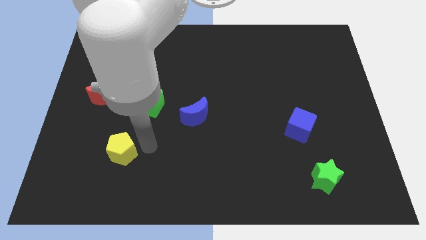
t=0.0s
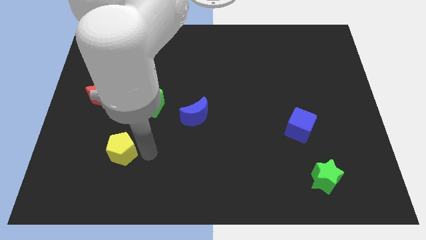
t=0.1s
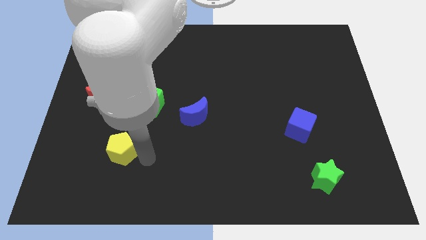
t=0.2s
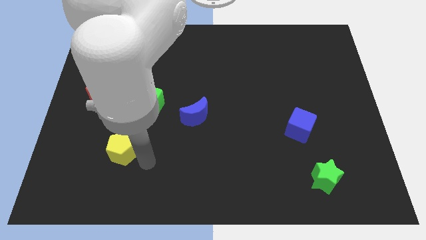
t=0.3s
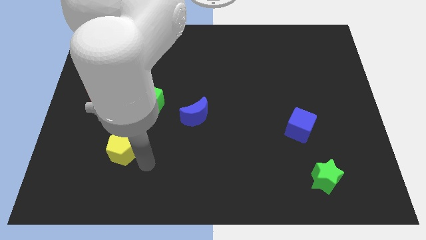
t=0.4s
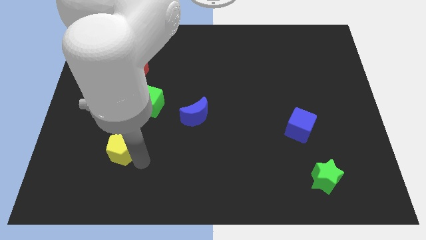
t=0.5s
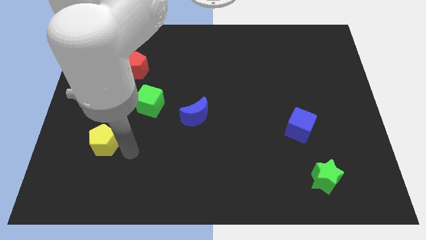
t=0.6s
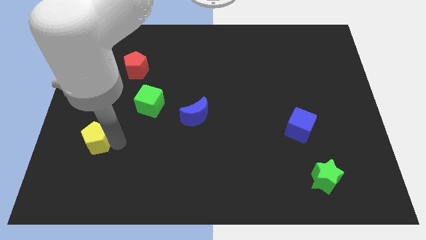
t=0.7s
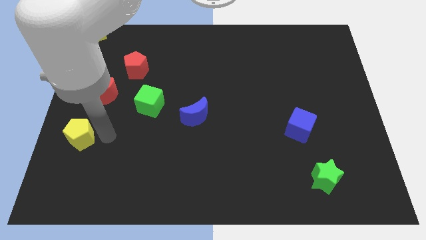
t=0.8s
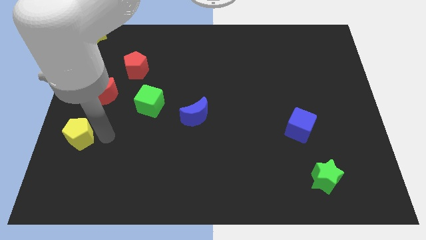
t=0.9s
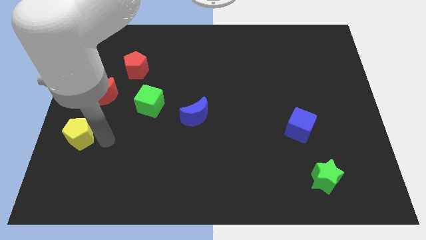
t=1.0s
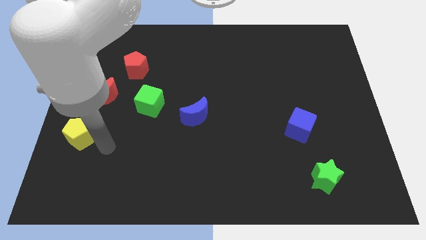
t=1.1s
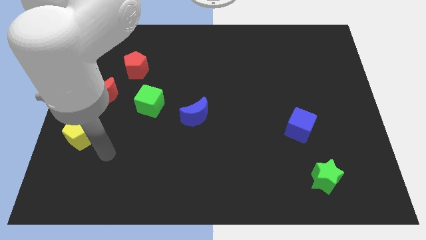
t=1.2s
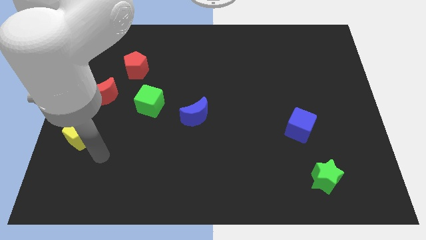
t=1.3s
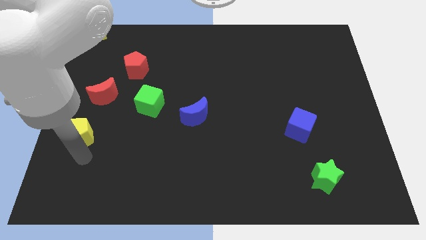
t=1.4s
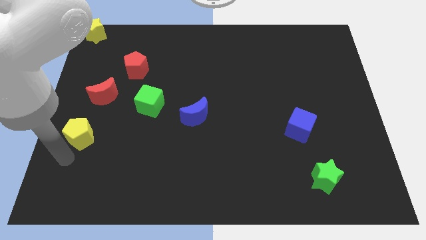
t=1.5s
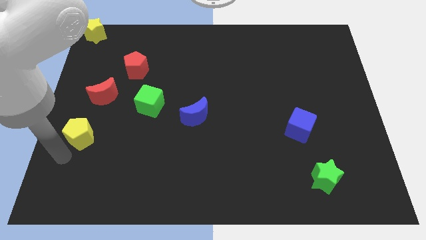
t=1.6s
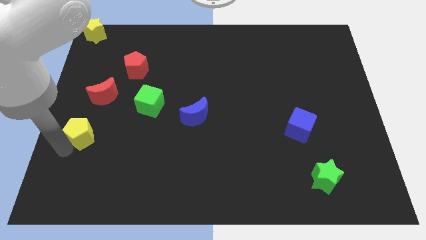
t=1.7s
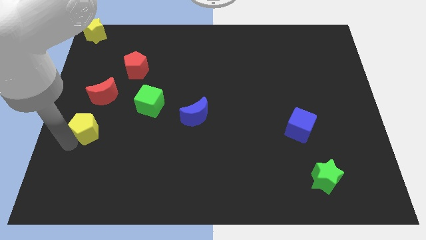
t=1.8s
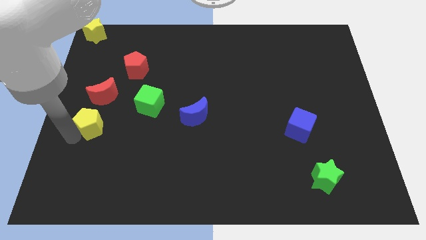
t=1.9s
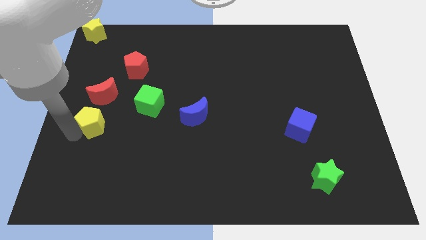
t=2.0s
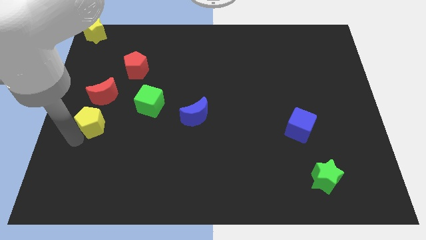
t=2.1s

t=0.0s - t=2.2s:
move the yellow pentagon under red crescent

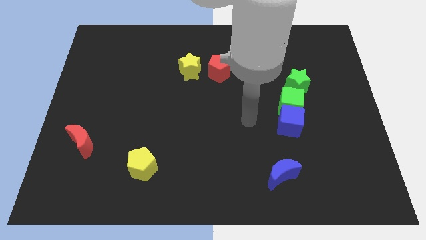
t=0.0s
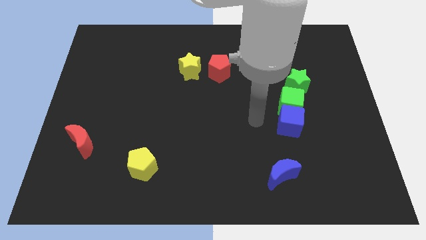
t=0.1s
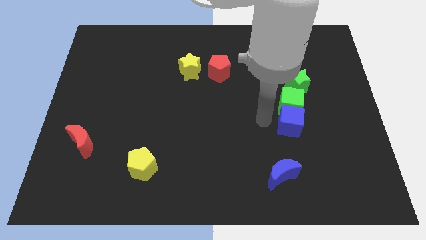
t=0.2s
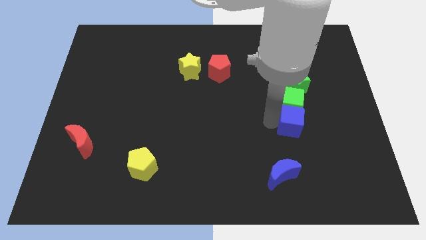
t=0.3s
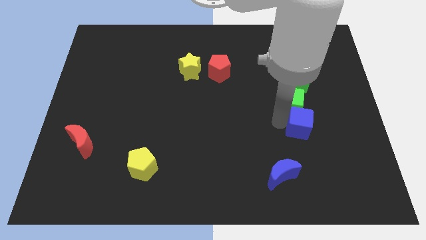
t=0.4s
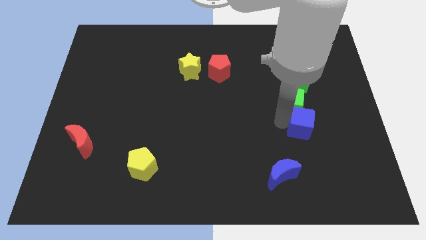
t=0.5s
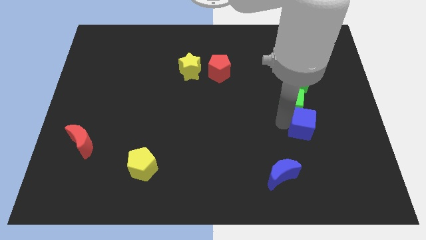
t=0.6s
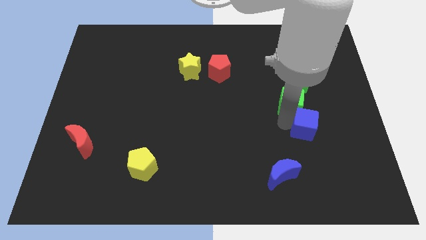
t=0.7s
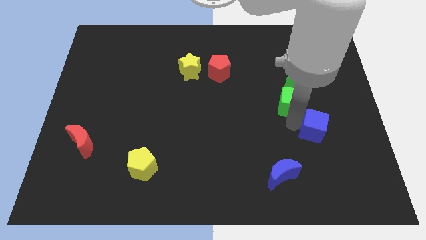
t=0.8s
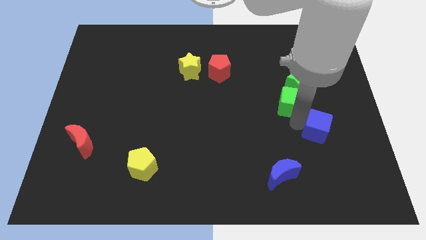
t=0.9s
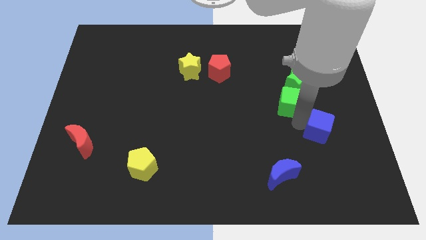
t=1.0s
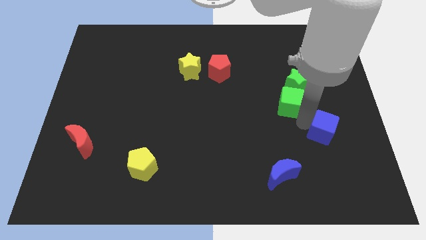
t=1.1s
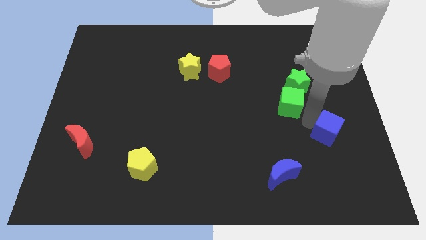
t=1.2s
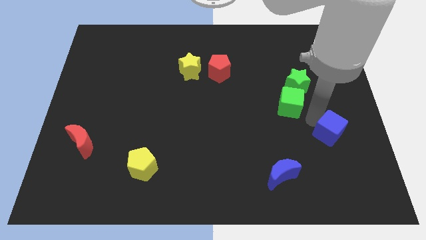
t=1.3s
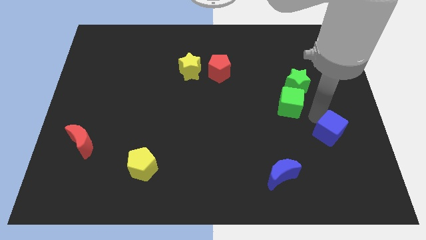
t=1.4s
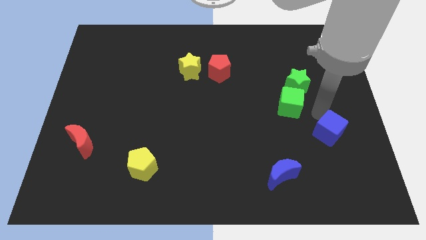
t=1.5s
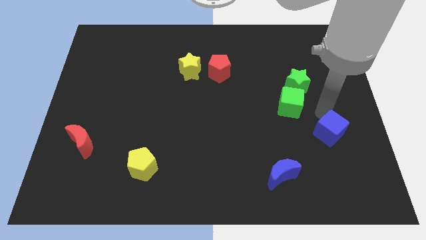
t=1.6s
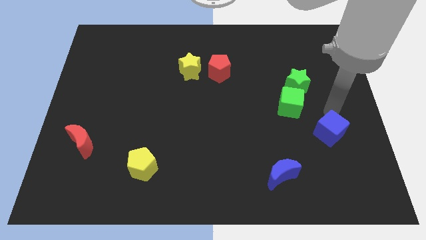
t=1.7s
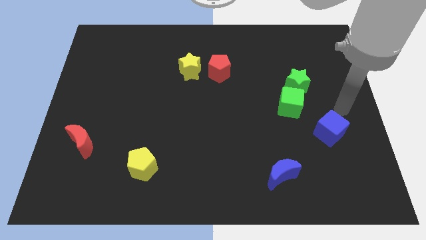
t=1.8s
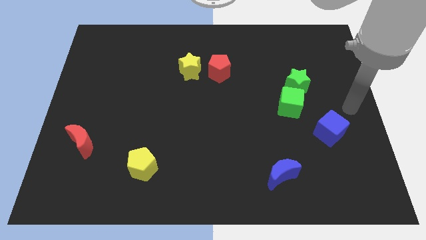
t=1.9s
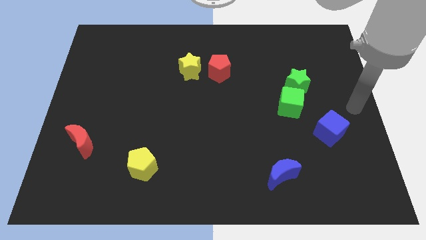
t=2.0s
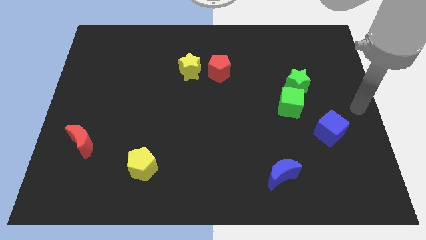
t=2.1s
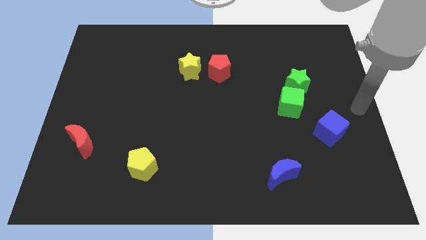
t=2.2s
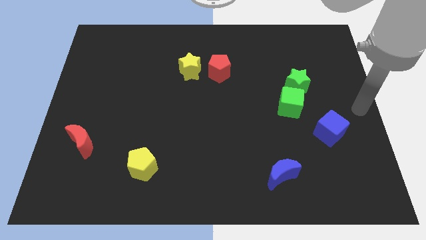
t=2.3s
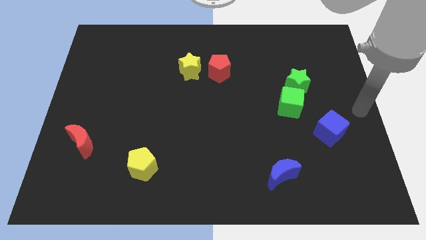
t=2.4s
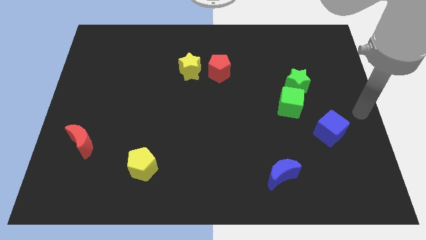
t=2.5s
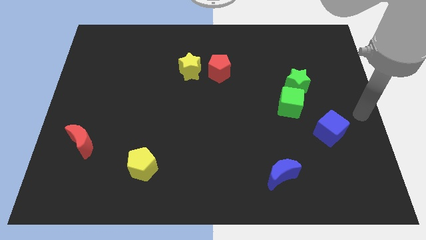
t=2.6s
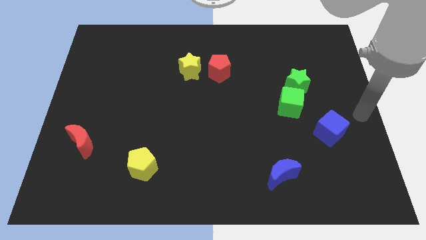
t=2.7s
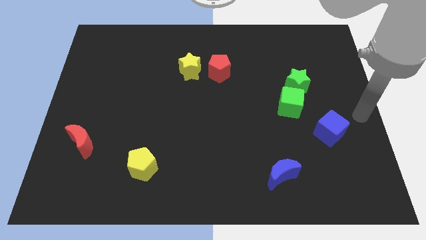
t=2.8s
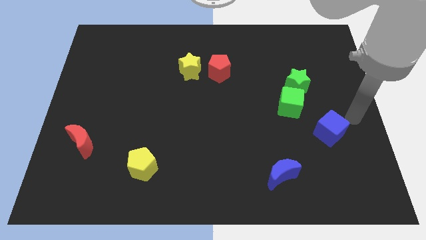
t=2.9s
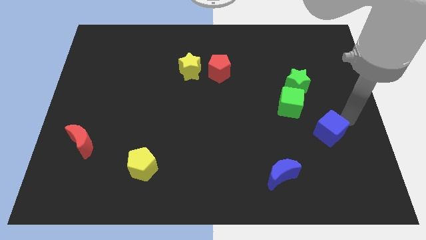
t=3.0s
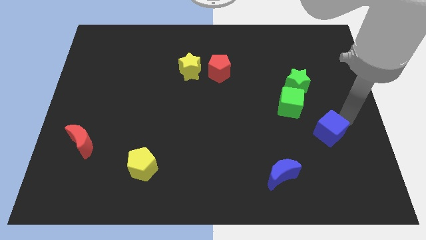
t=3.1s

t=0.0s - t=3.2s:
separate the blue cube from the green cube

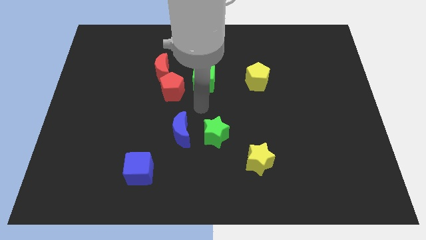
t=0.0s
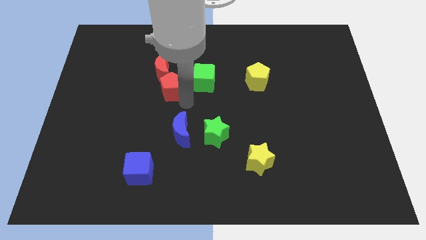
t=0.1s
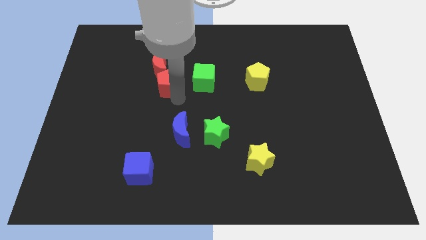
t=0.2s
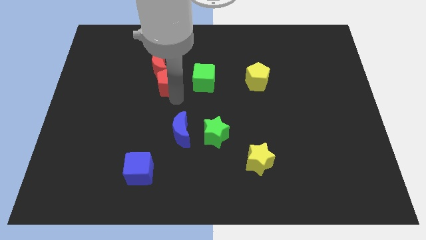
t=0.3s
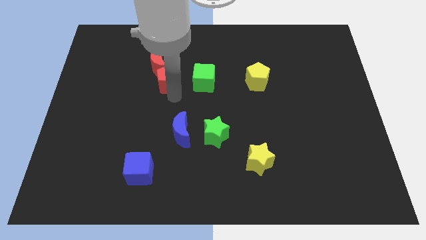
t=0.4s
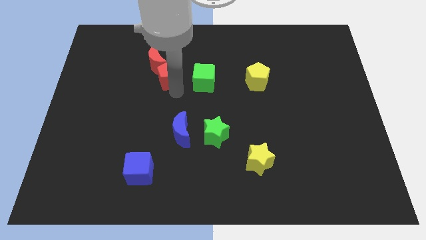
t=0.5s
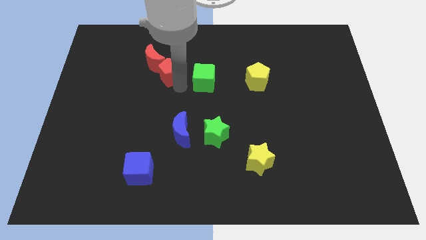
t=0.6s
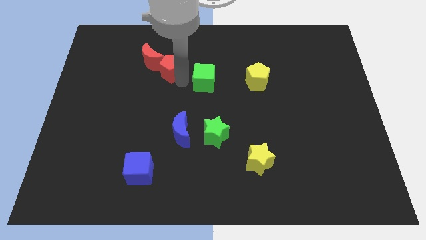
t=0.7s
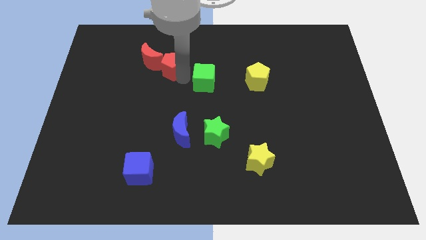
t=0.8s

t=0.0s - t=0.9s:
move red blocks slightly towards top

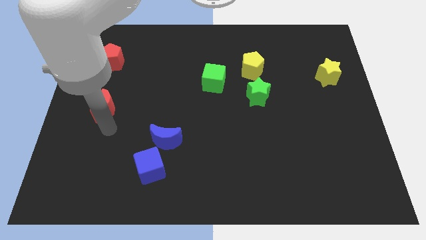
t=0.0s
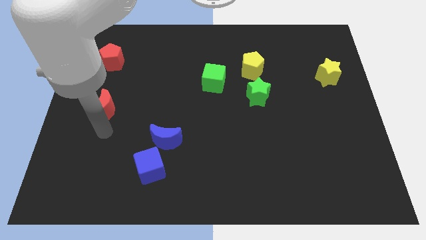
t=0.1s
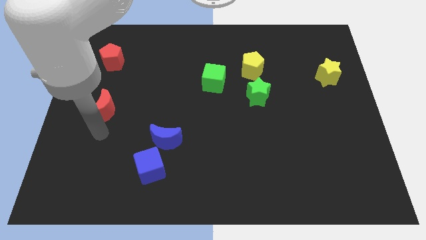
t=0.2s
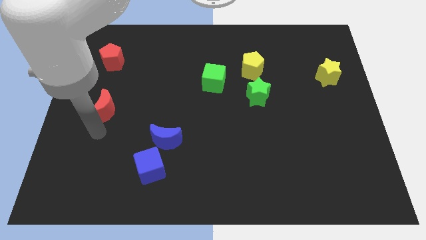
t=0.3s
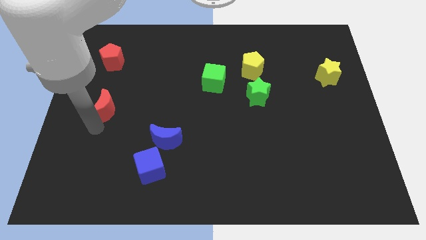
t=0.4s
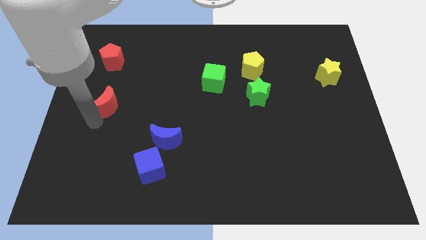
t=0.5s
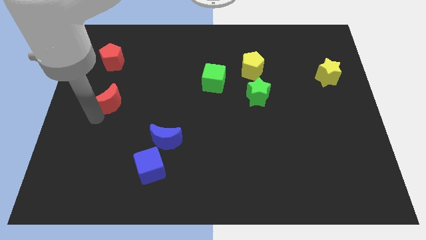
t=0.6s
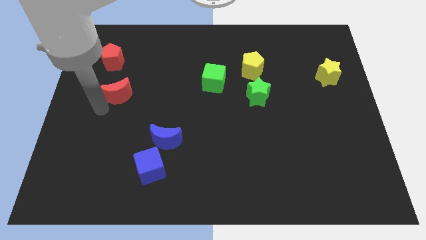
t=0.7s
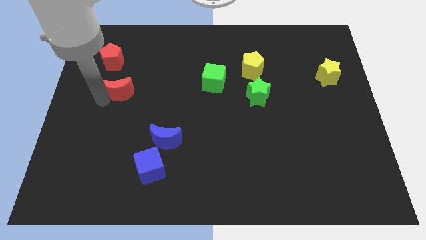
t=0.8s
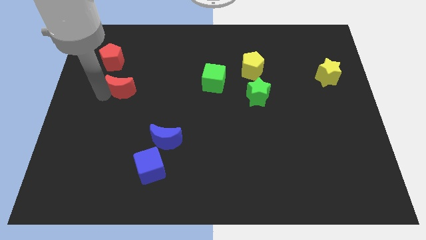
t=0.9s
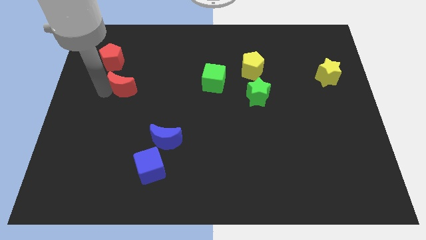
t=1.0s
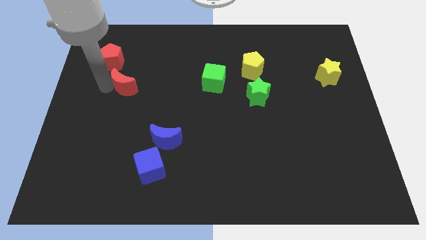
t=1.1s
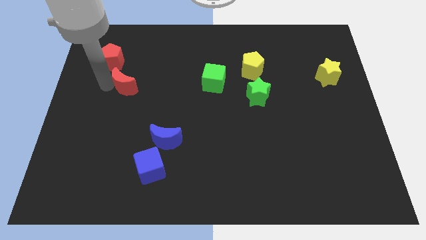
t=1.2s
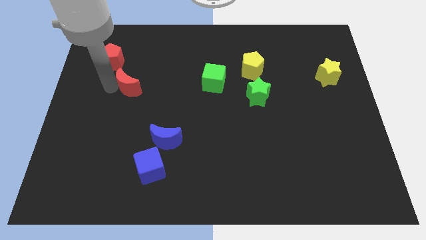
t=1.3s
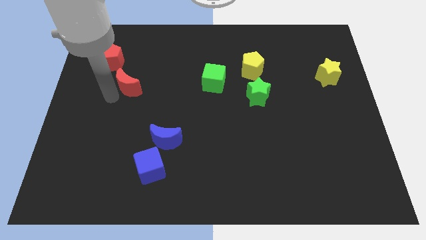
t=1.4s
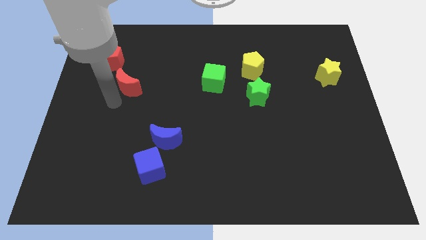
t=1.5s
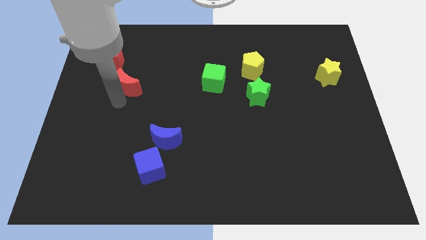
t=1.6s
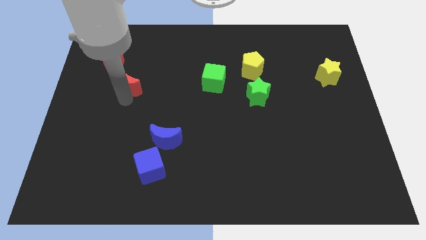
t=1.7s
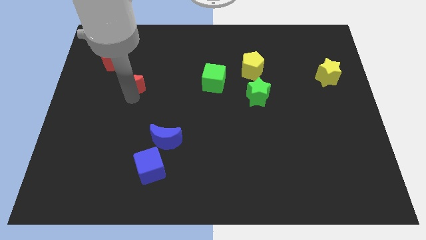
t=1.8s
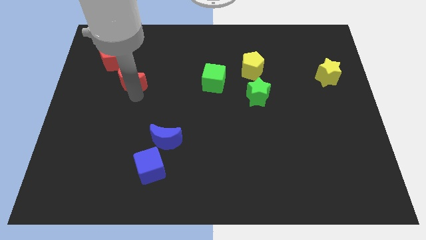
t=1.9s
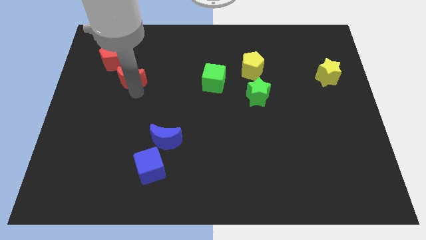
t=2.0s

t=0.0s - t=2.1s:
move the red crescent to the bottom right of the red pentagon

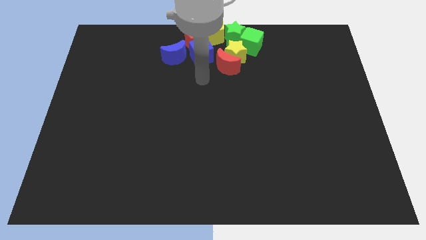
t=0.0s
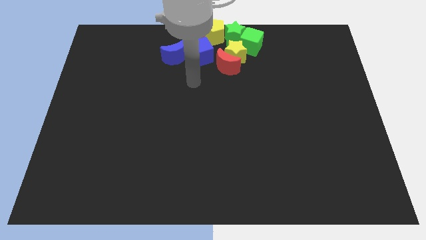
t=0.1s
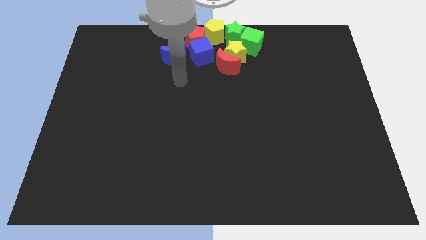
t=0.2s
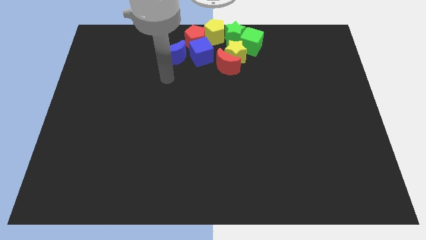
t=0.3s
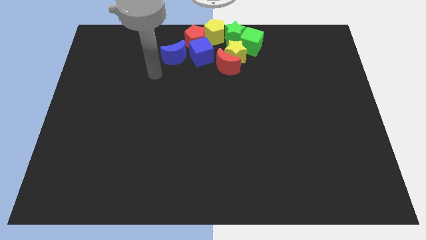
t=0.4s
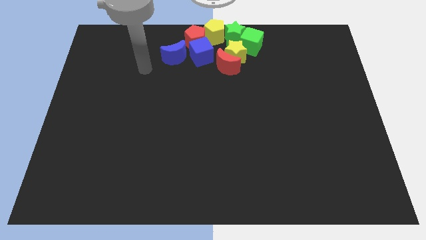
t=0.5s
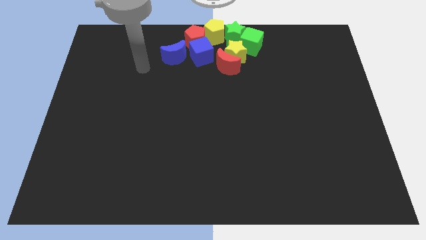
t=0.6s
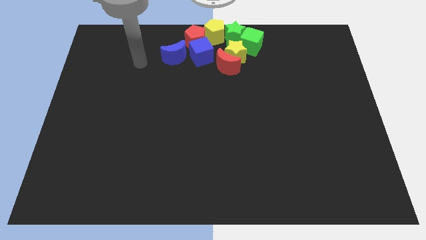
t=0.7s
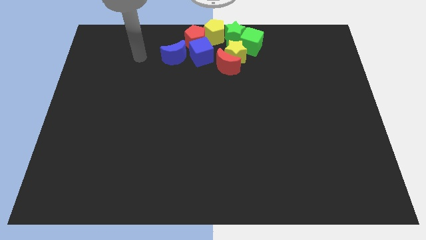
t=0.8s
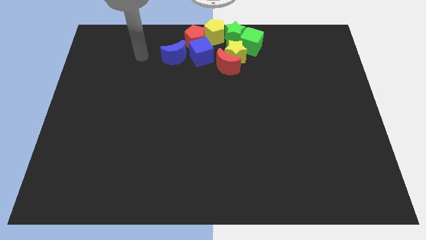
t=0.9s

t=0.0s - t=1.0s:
move your arm to the left of the blue crescent
